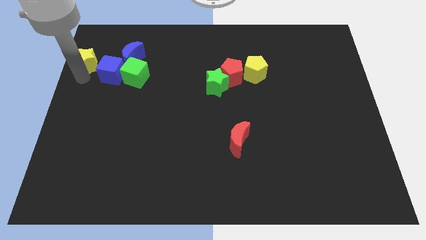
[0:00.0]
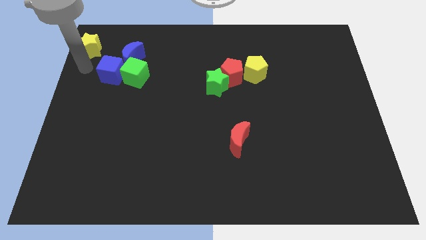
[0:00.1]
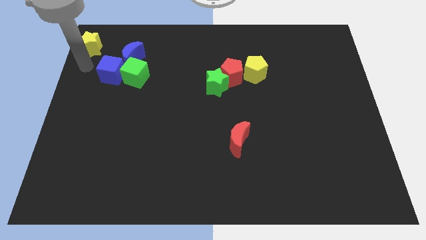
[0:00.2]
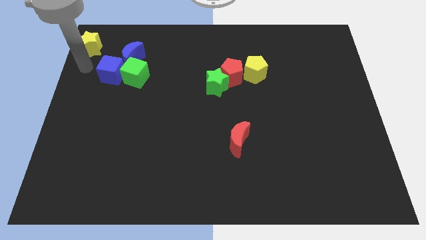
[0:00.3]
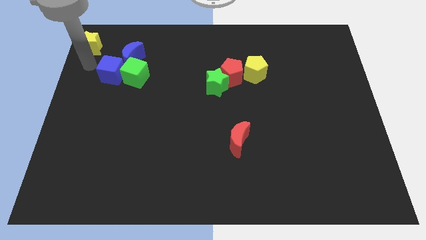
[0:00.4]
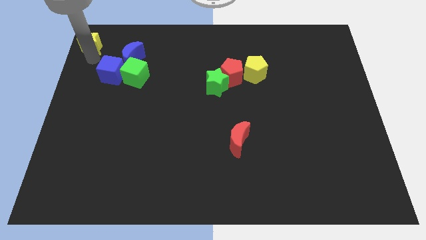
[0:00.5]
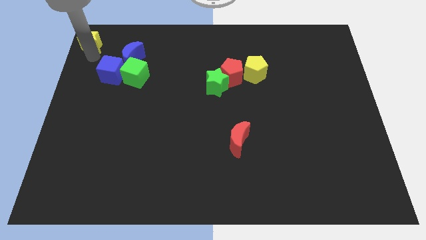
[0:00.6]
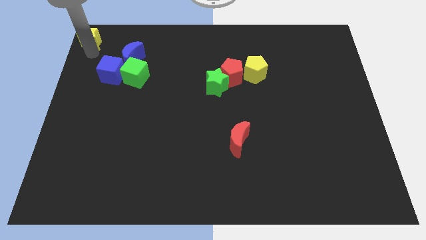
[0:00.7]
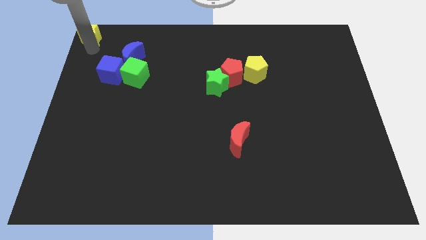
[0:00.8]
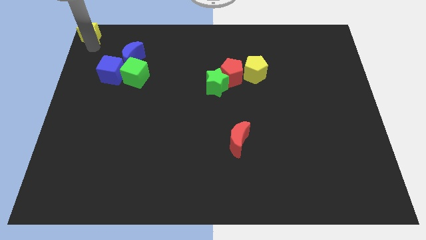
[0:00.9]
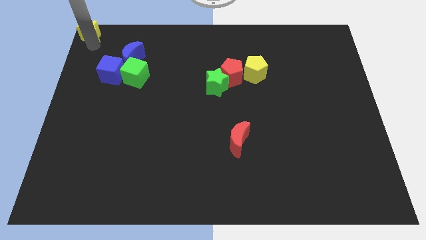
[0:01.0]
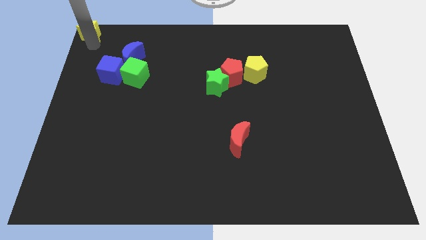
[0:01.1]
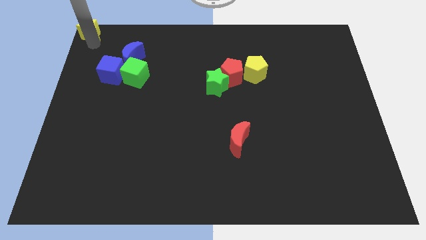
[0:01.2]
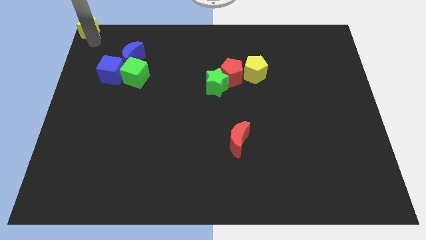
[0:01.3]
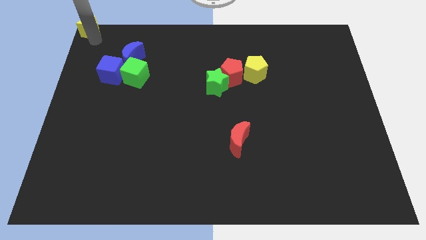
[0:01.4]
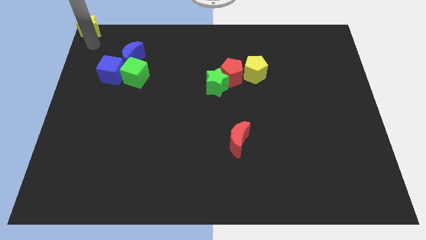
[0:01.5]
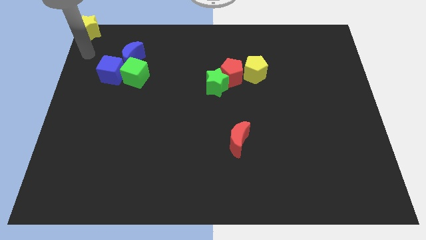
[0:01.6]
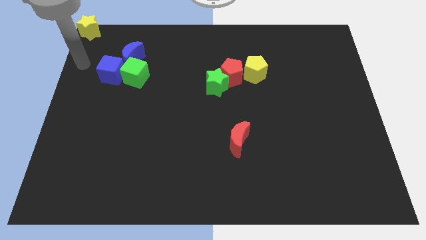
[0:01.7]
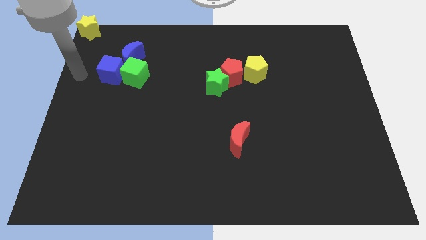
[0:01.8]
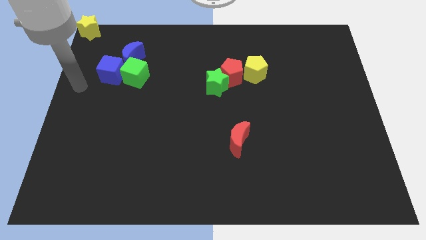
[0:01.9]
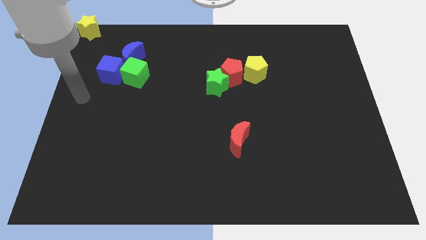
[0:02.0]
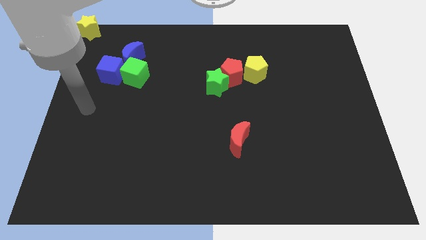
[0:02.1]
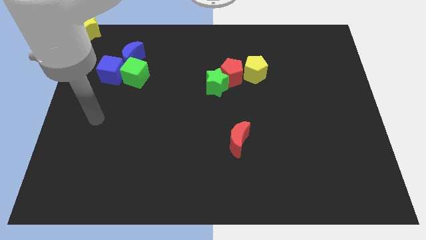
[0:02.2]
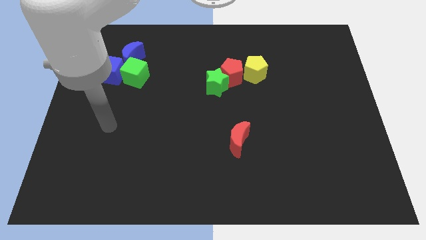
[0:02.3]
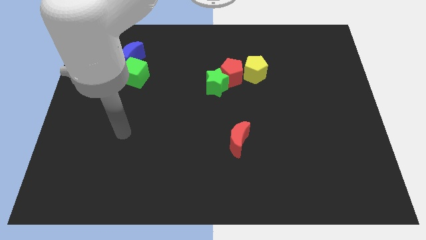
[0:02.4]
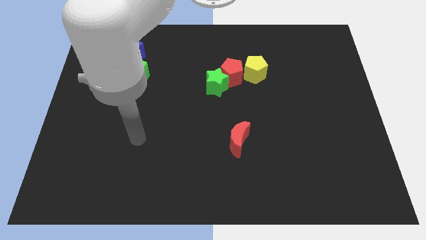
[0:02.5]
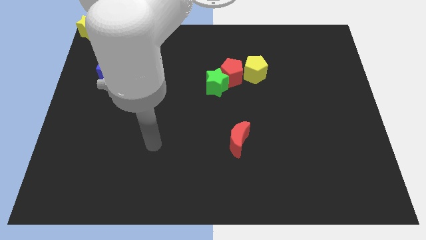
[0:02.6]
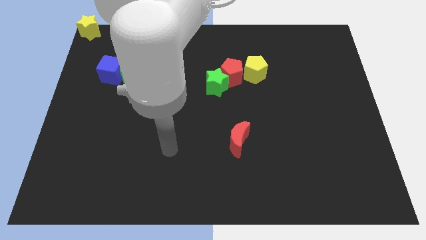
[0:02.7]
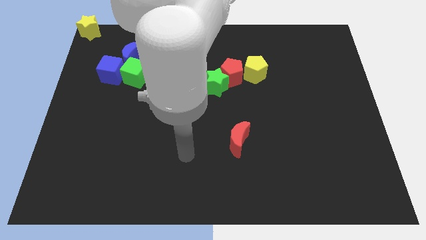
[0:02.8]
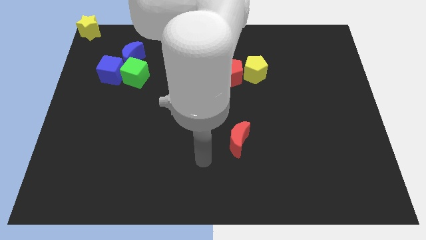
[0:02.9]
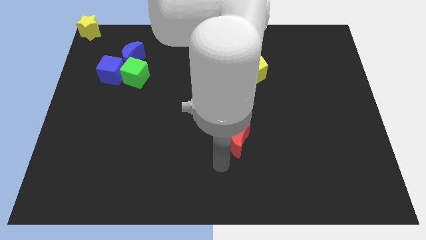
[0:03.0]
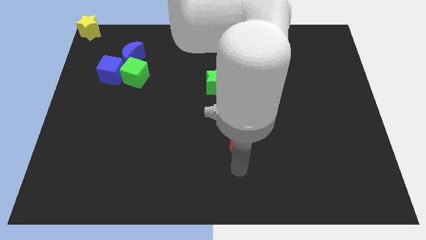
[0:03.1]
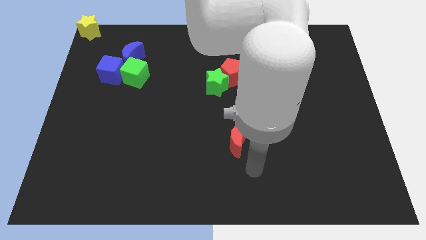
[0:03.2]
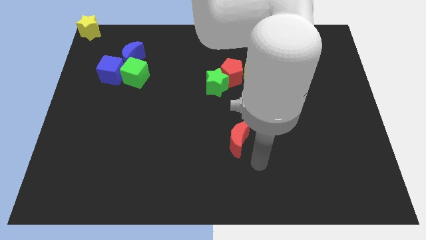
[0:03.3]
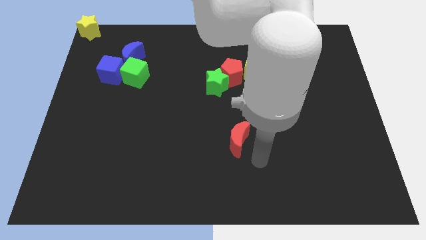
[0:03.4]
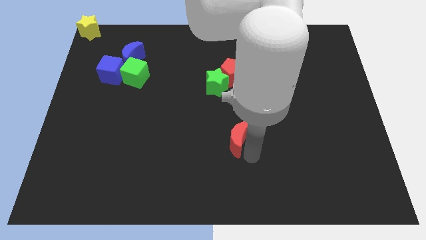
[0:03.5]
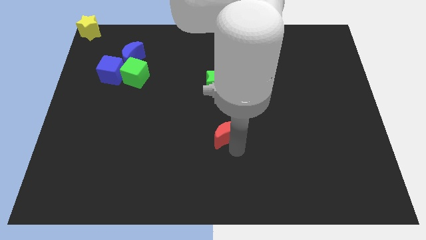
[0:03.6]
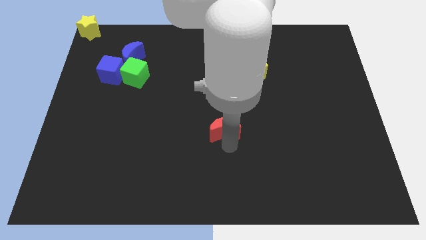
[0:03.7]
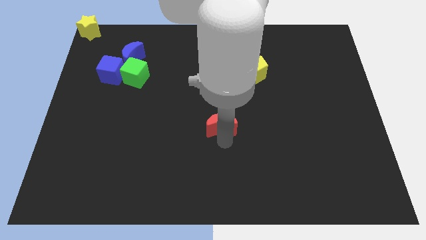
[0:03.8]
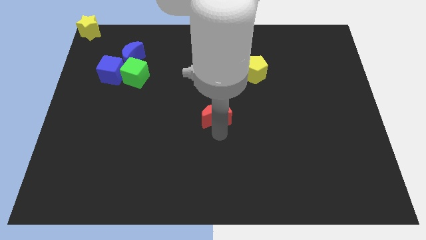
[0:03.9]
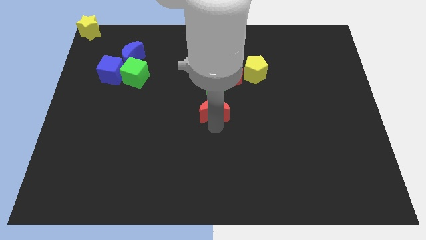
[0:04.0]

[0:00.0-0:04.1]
place the red moon down to the green star

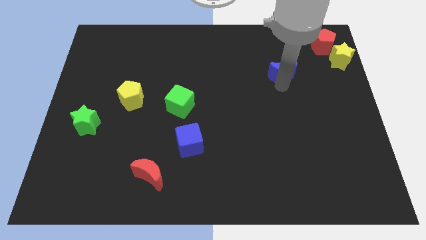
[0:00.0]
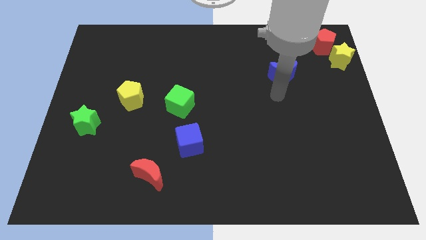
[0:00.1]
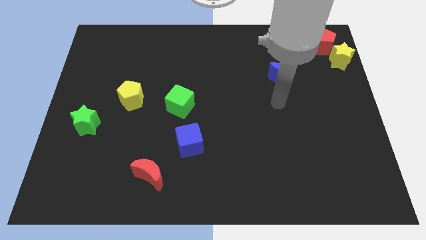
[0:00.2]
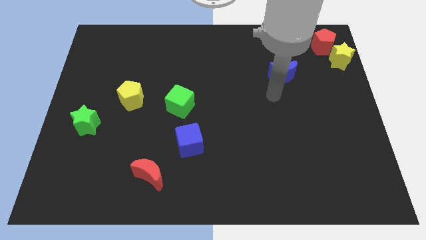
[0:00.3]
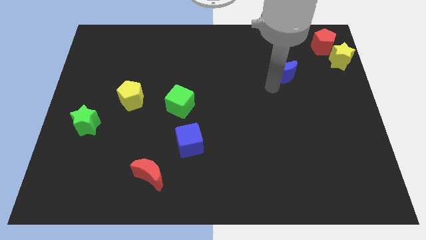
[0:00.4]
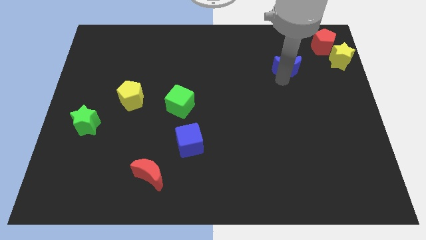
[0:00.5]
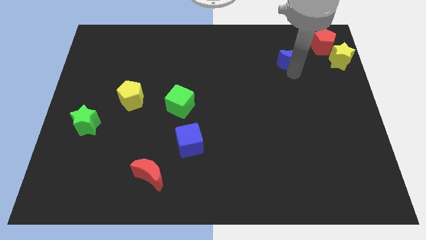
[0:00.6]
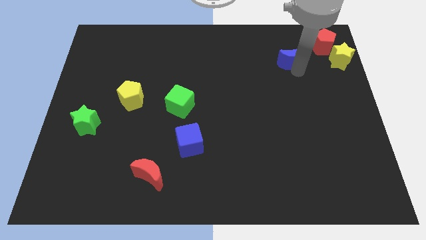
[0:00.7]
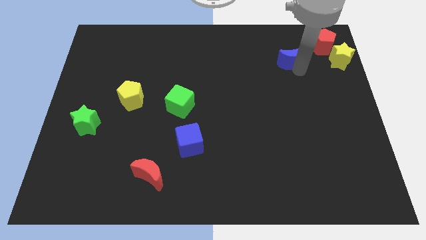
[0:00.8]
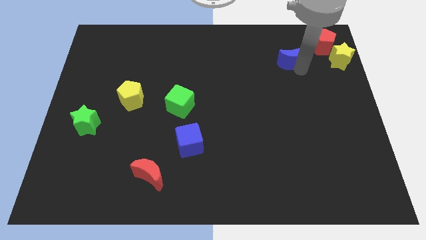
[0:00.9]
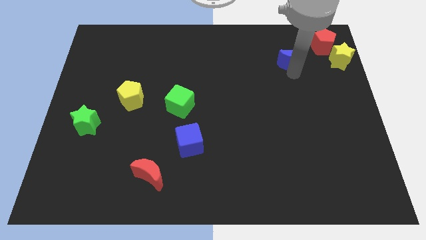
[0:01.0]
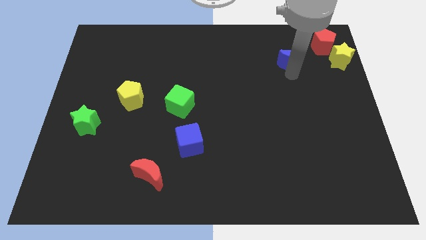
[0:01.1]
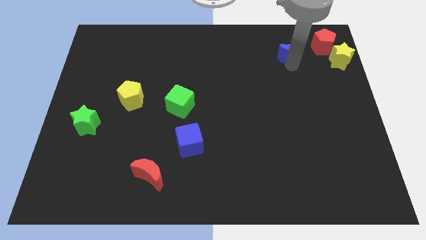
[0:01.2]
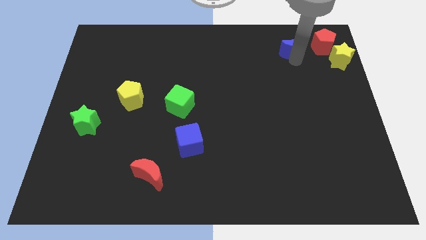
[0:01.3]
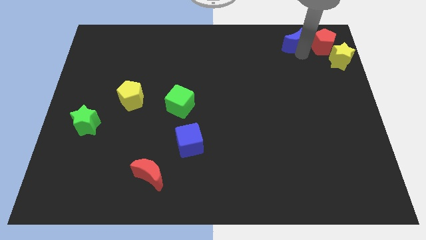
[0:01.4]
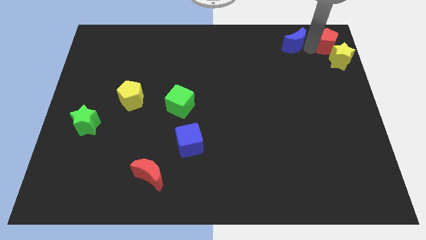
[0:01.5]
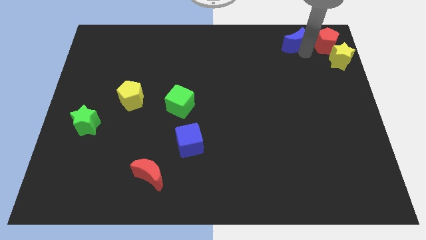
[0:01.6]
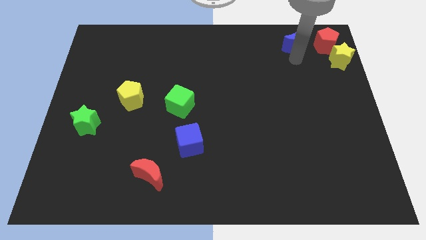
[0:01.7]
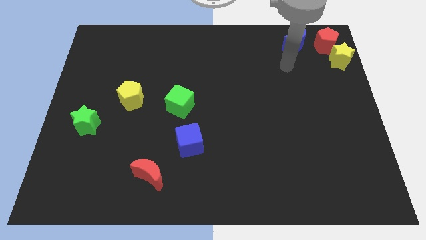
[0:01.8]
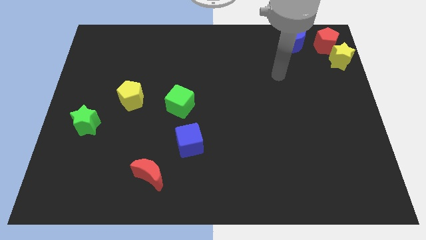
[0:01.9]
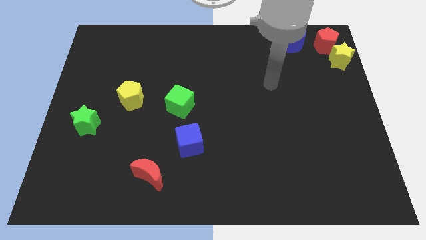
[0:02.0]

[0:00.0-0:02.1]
move the blue crescent towards the left side of the red pentagon

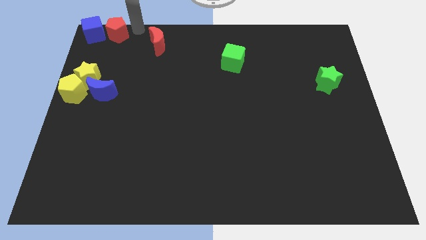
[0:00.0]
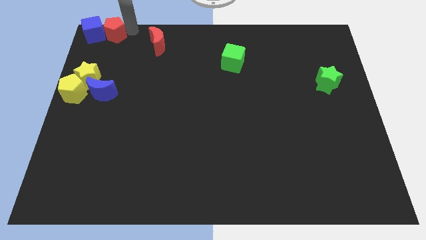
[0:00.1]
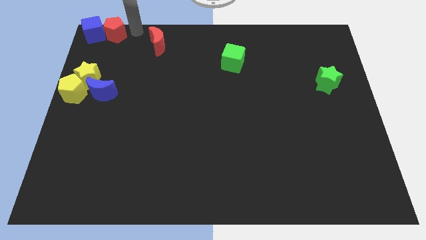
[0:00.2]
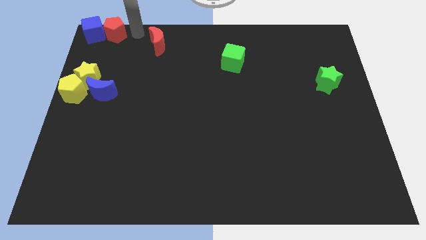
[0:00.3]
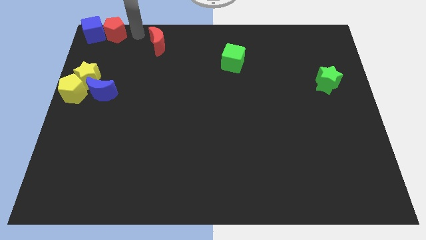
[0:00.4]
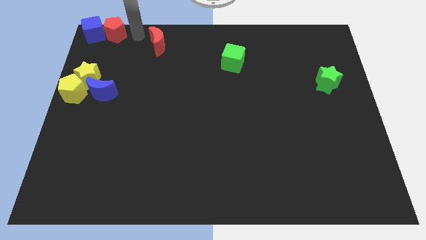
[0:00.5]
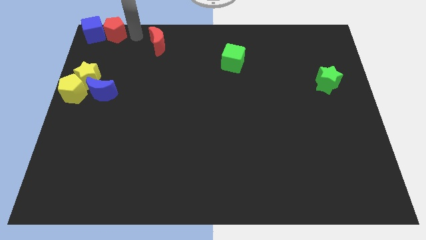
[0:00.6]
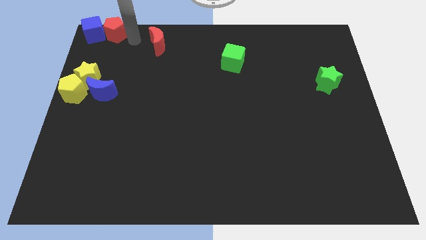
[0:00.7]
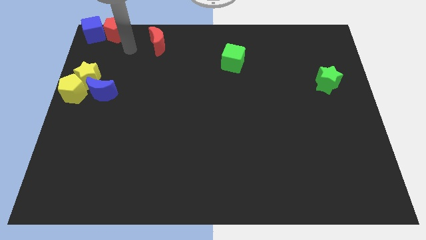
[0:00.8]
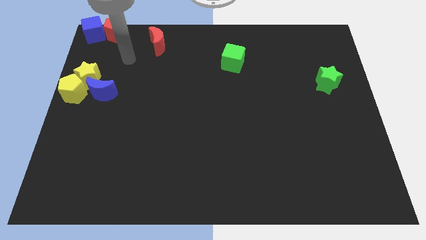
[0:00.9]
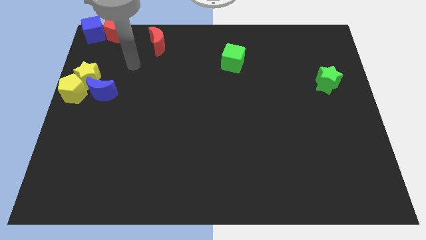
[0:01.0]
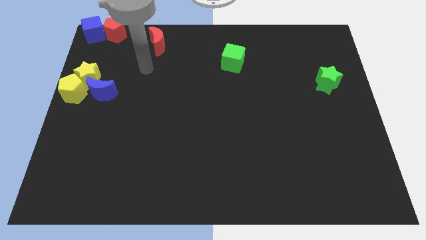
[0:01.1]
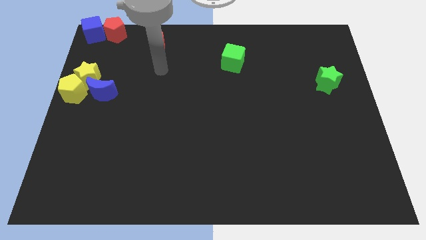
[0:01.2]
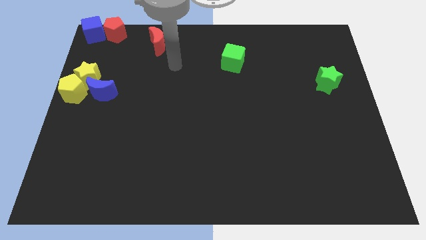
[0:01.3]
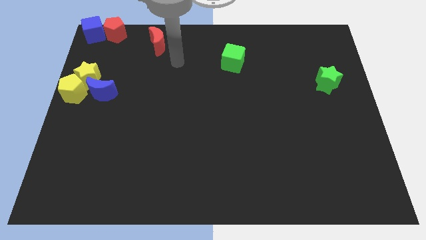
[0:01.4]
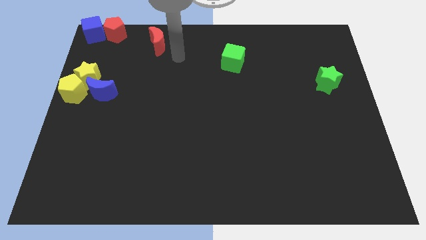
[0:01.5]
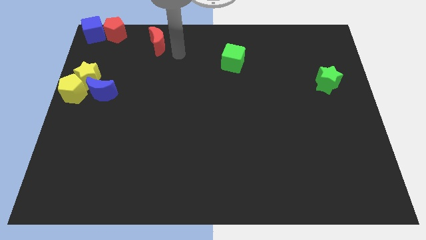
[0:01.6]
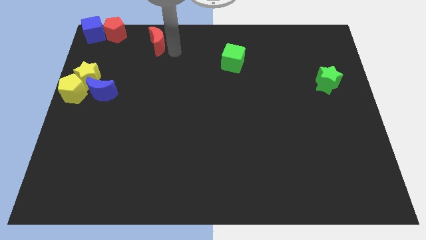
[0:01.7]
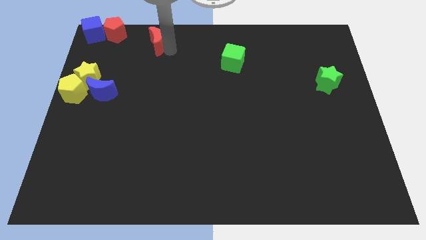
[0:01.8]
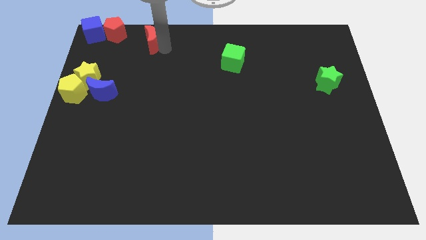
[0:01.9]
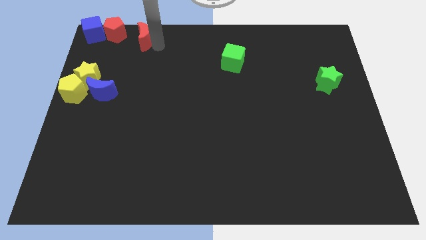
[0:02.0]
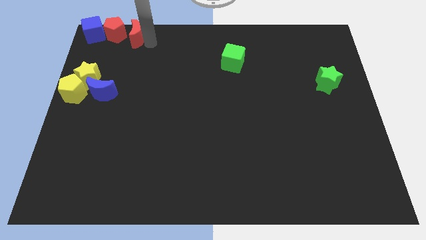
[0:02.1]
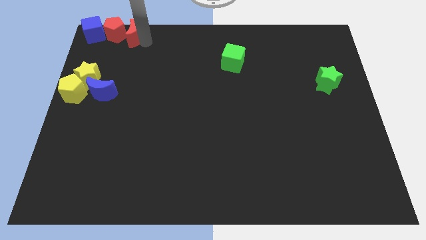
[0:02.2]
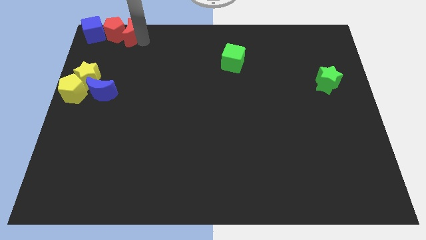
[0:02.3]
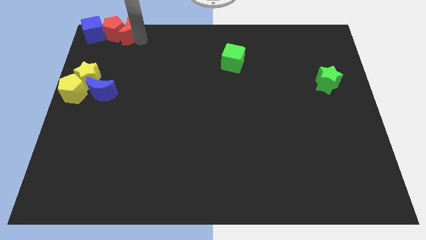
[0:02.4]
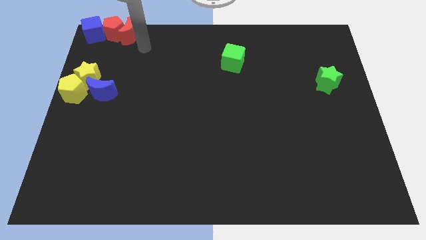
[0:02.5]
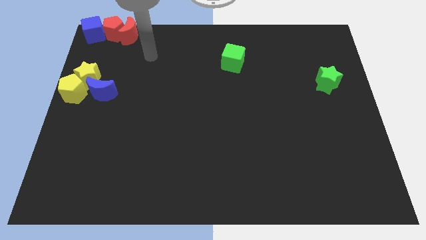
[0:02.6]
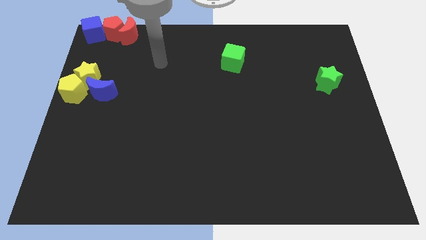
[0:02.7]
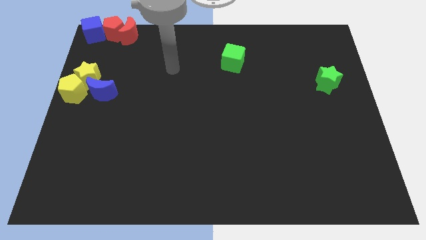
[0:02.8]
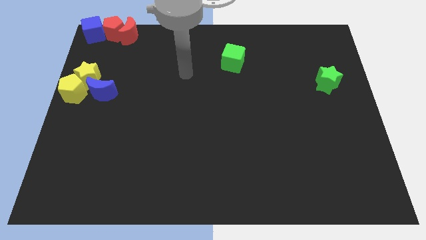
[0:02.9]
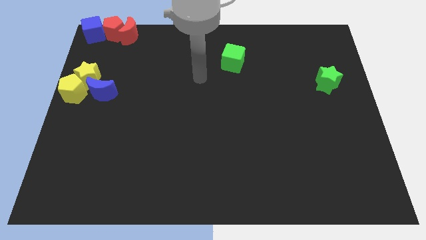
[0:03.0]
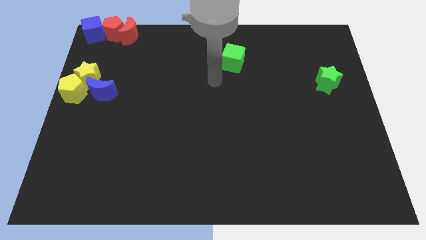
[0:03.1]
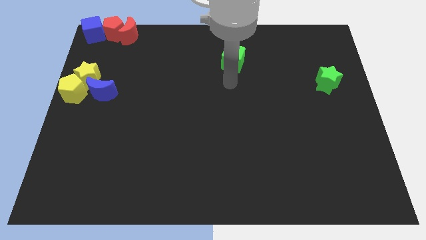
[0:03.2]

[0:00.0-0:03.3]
move the red moon into the red pentagon
